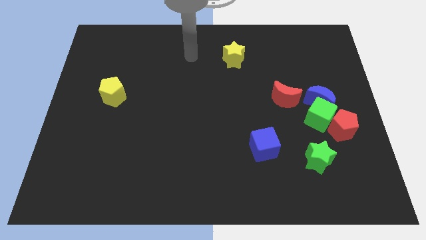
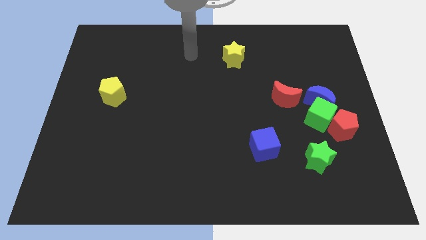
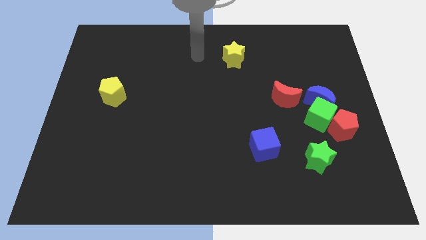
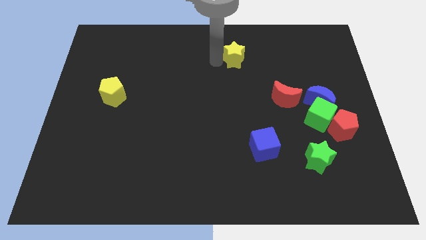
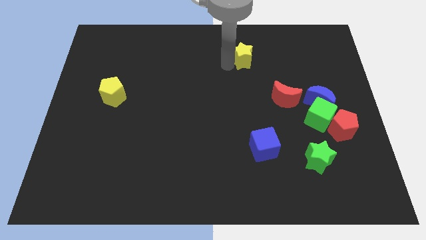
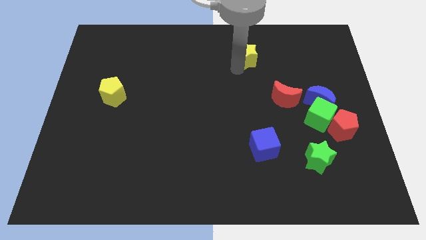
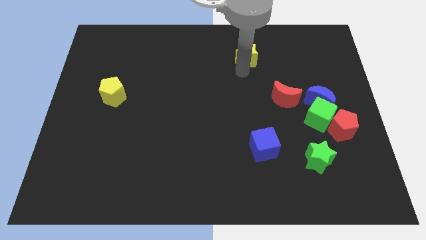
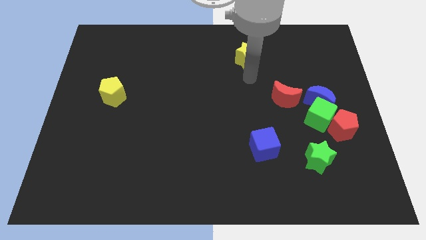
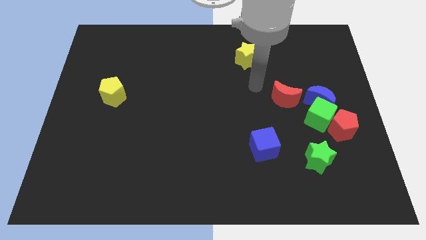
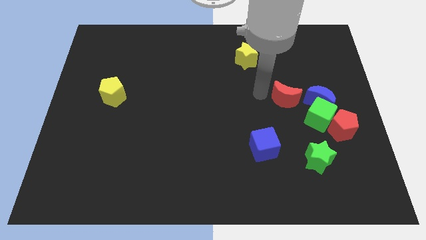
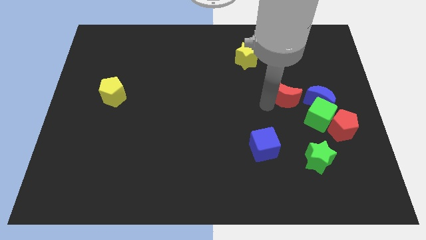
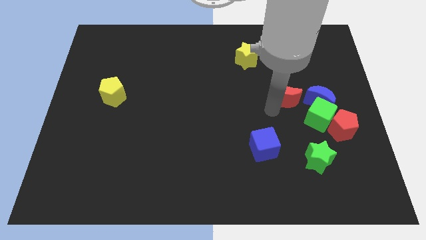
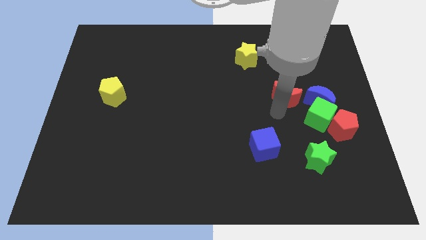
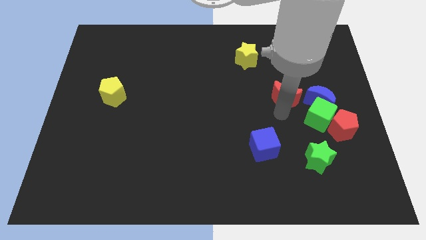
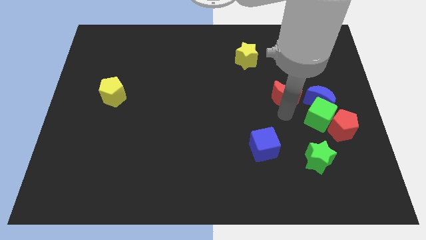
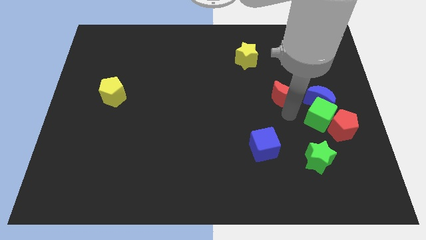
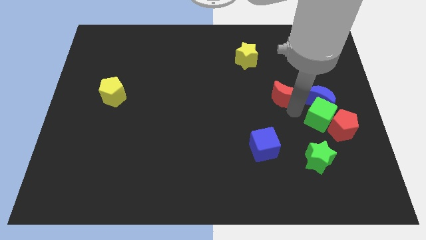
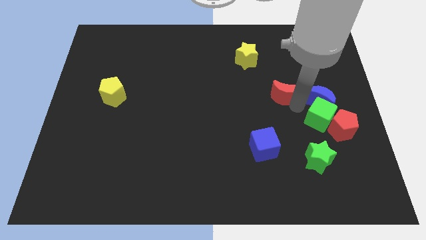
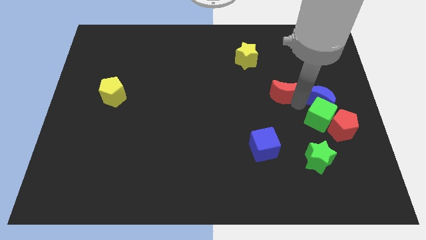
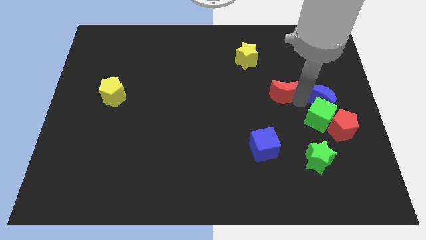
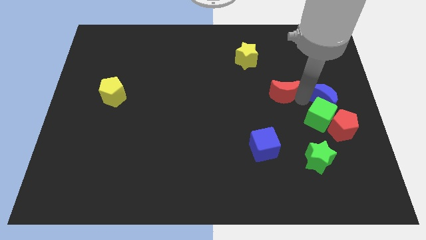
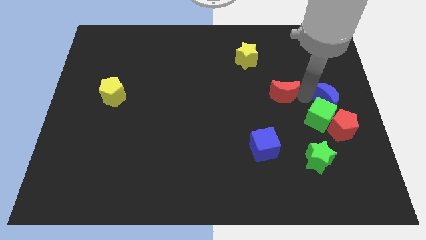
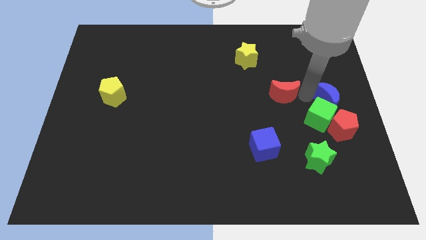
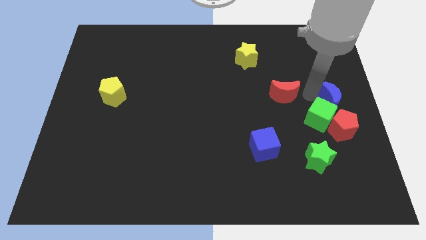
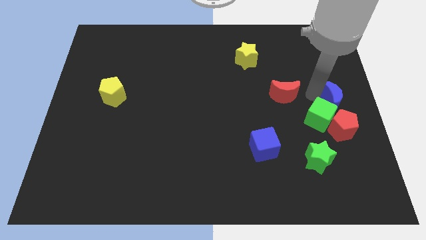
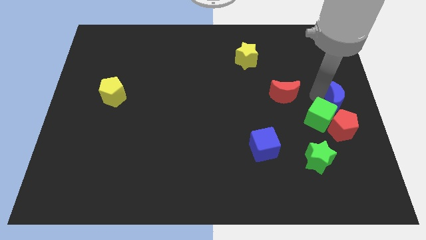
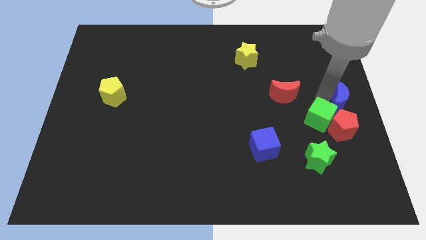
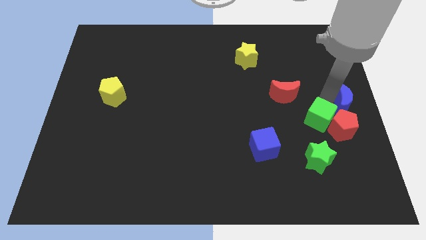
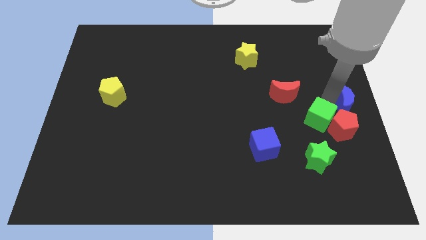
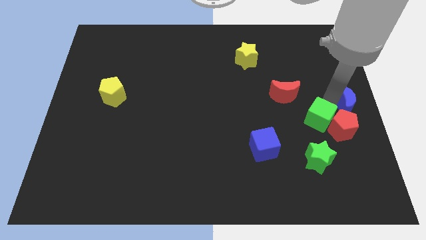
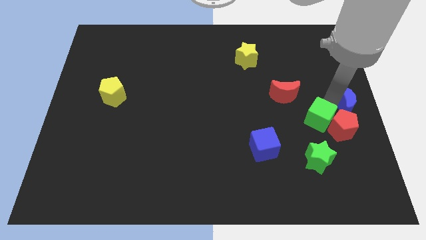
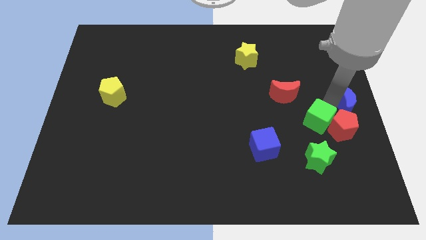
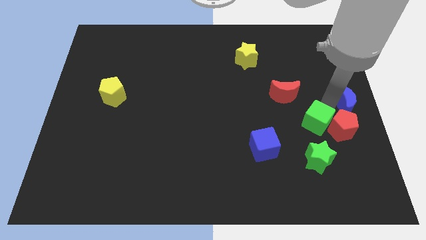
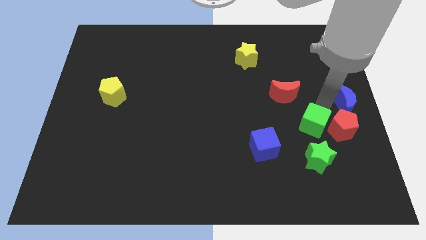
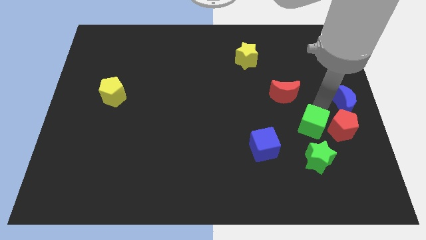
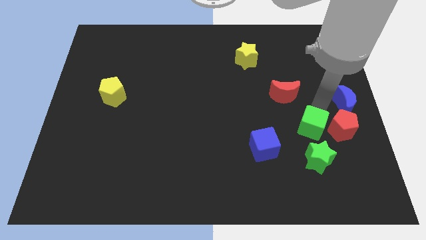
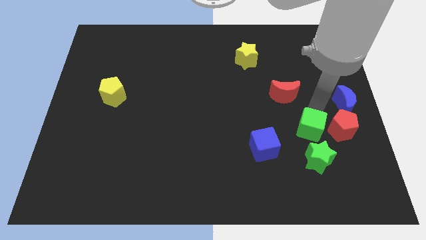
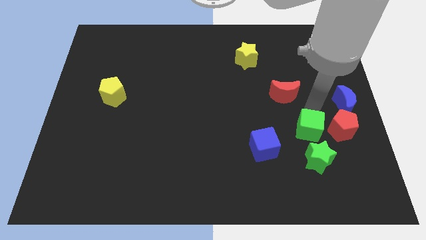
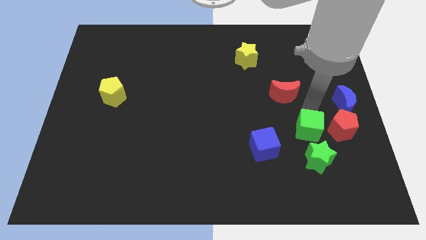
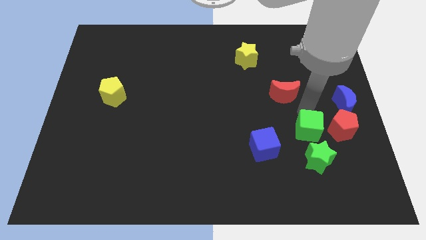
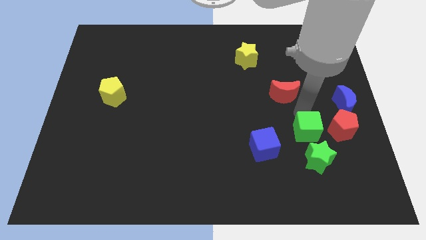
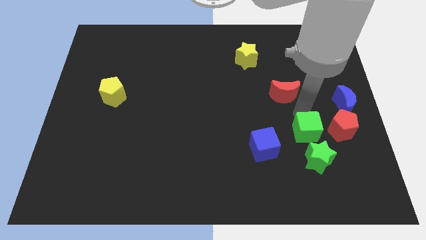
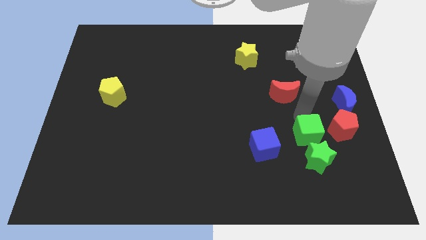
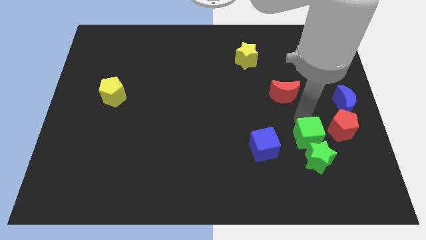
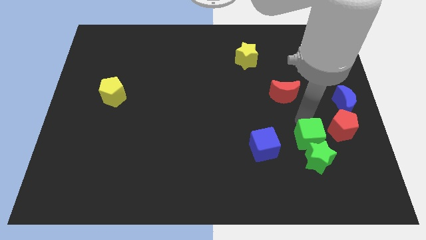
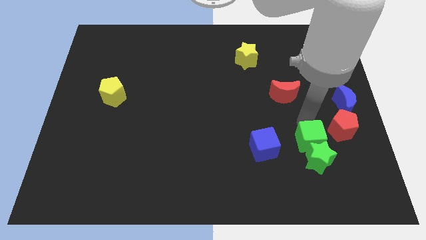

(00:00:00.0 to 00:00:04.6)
put the green cube close to the green star

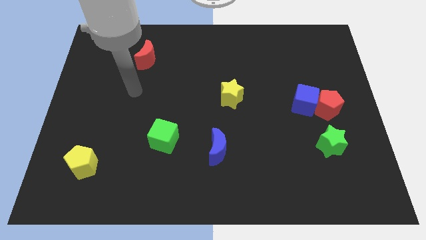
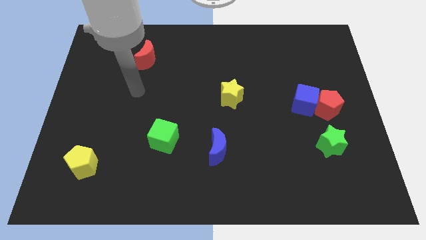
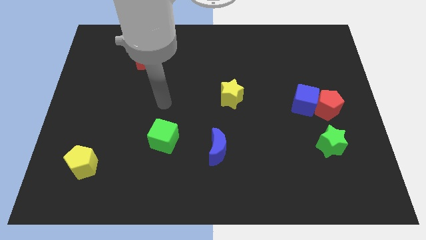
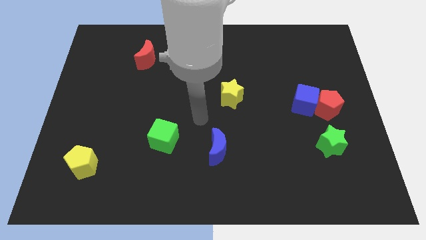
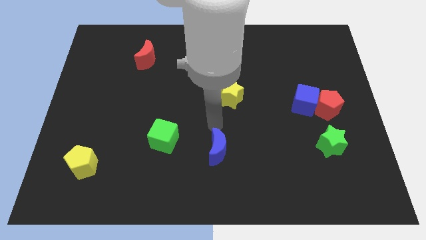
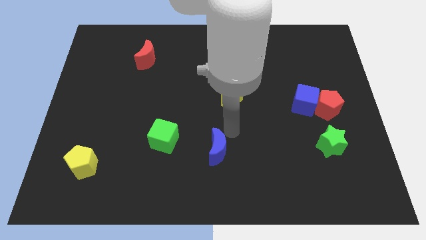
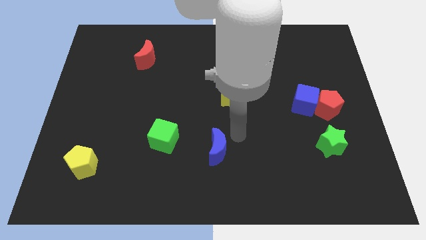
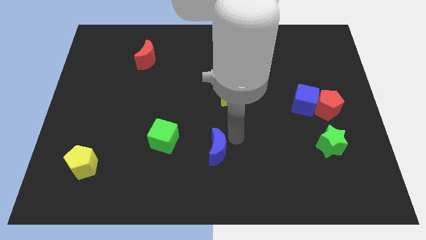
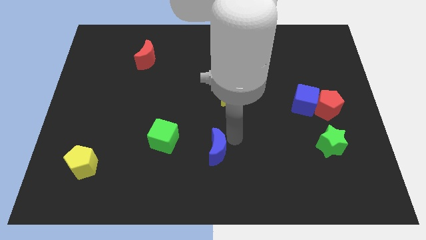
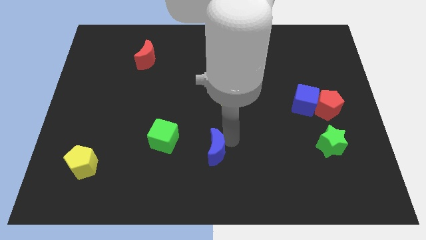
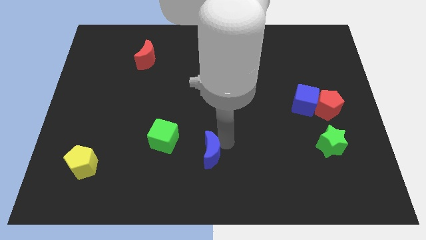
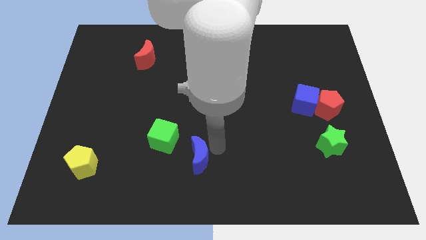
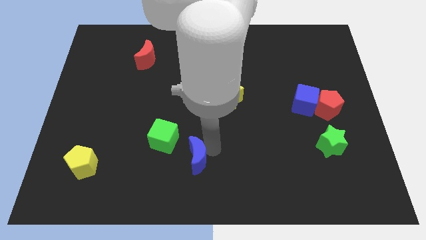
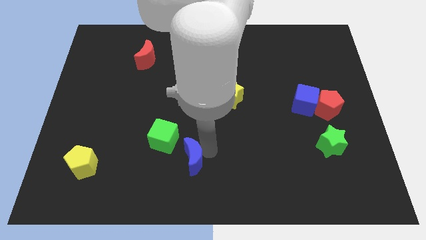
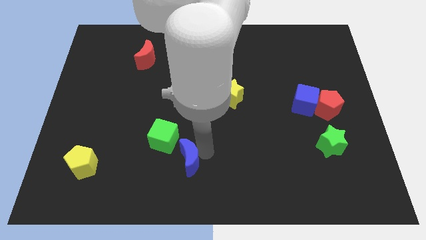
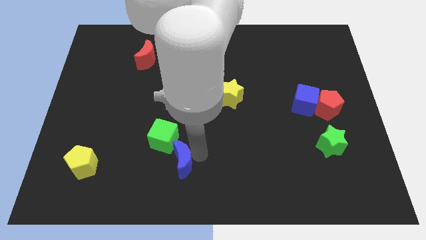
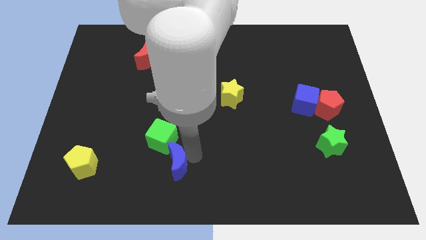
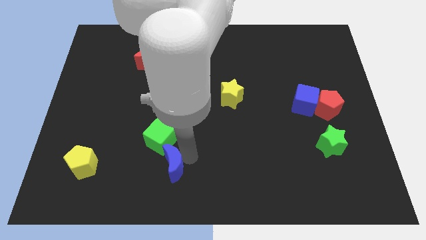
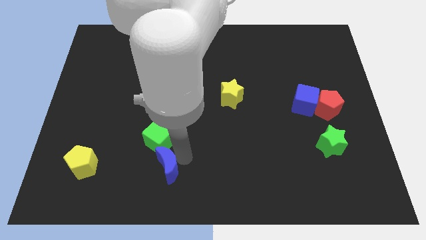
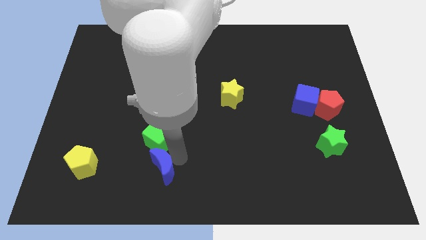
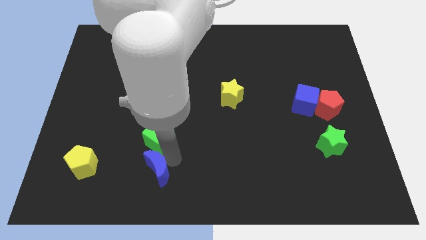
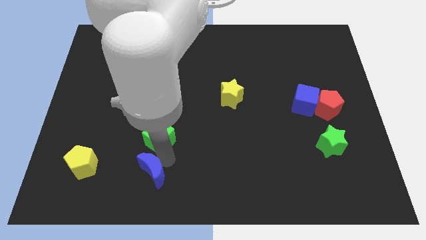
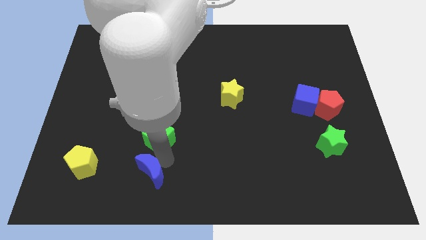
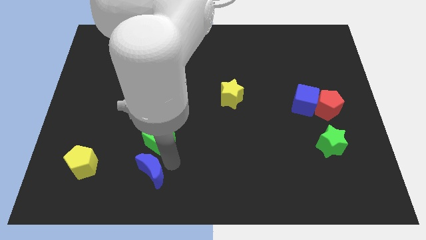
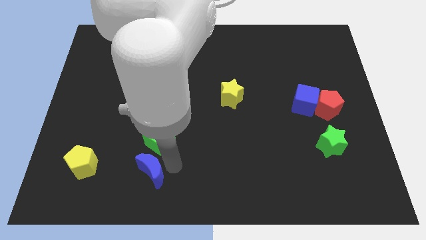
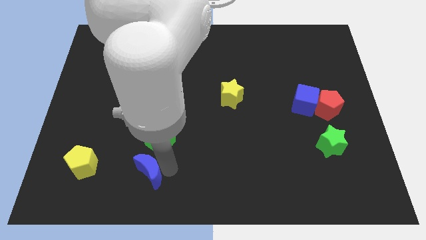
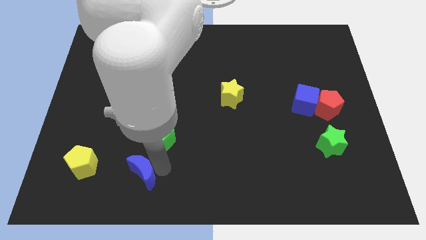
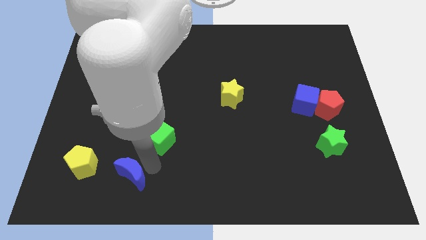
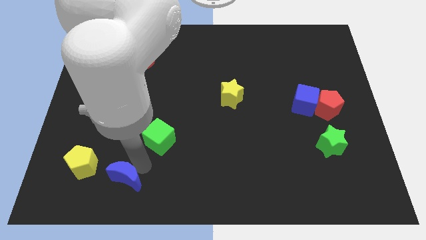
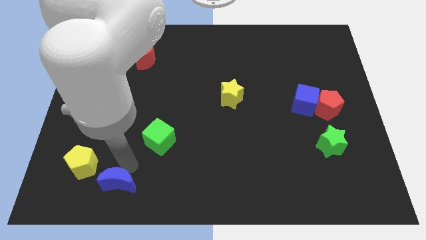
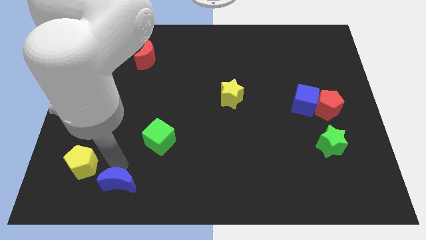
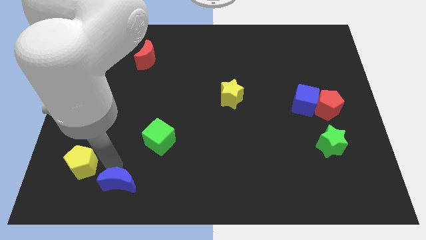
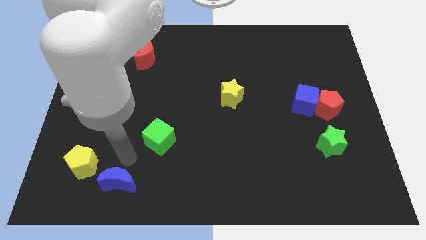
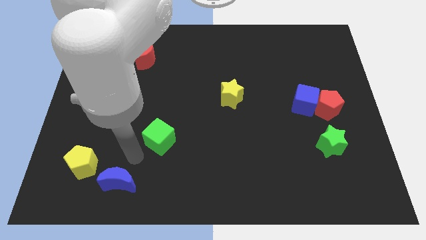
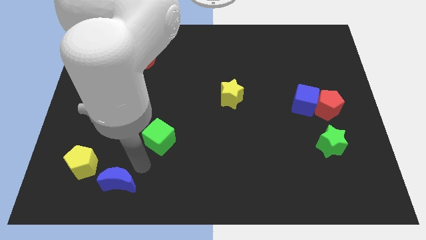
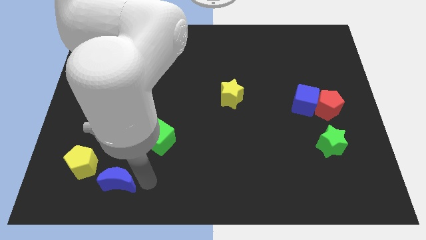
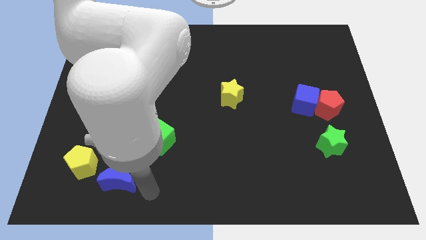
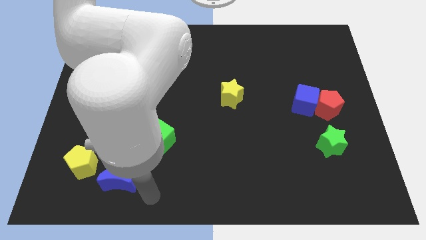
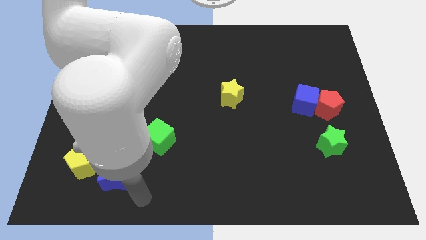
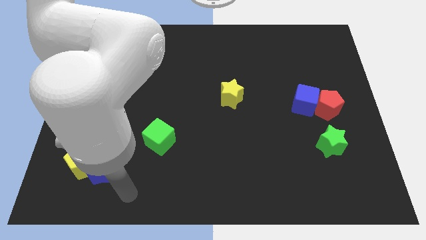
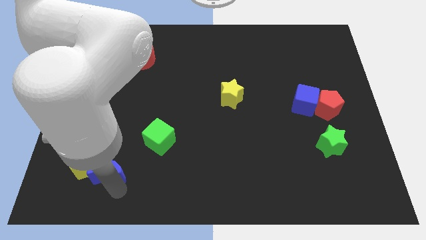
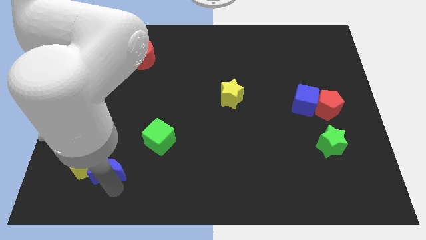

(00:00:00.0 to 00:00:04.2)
put the blue moon next to the yellow pentagon
